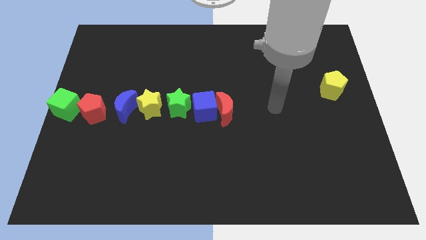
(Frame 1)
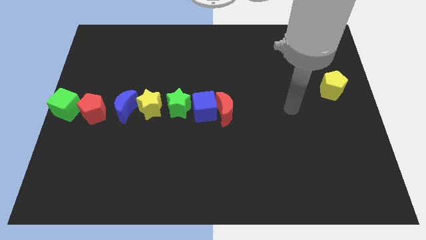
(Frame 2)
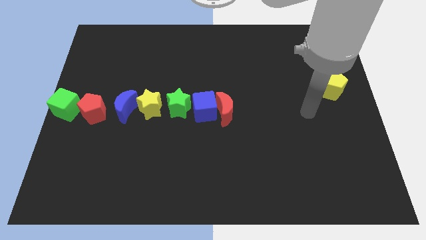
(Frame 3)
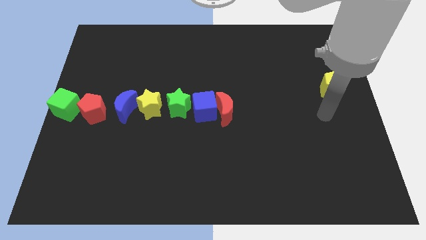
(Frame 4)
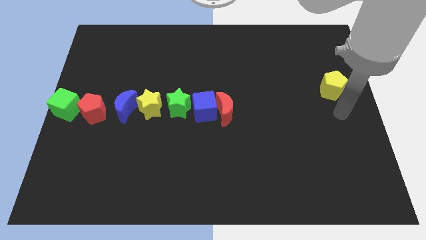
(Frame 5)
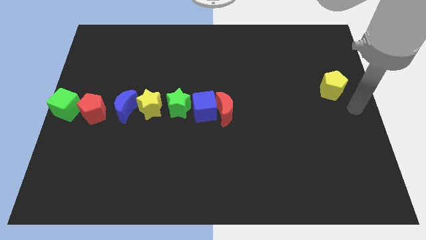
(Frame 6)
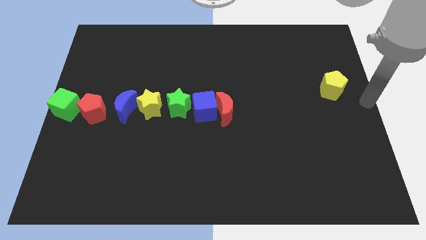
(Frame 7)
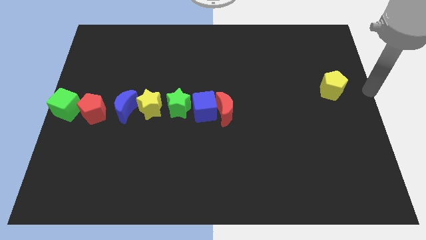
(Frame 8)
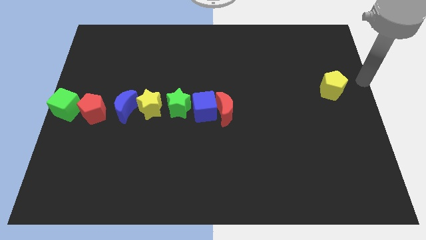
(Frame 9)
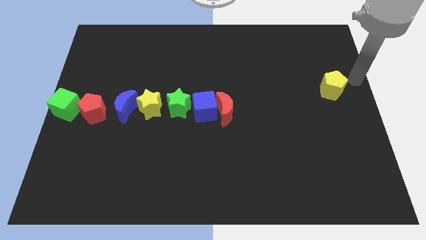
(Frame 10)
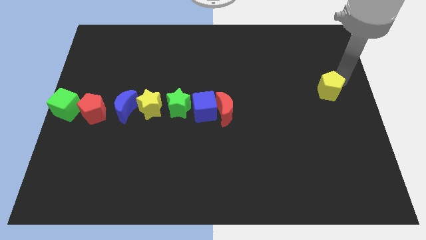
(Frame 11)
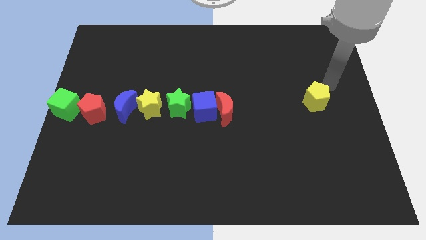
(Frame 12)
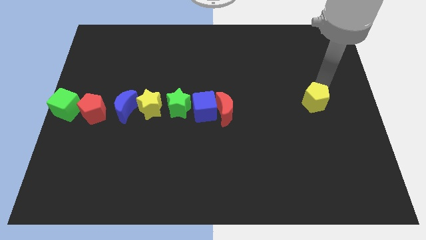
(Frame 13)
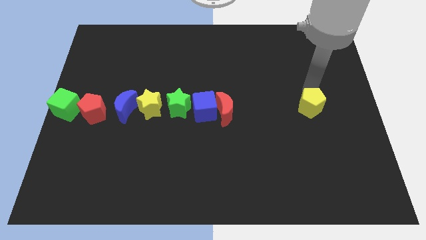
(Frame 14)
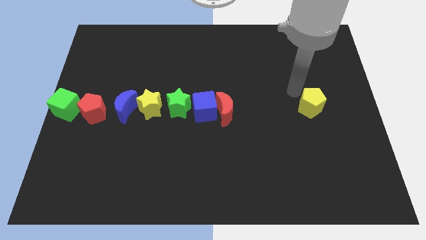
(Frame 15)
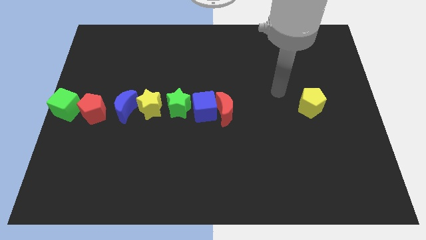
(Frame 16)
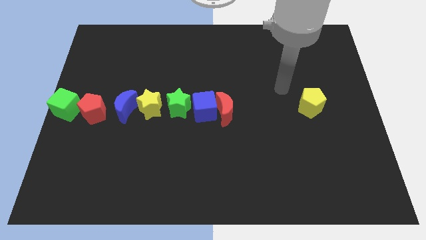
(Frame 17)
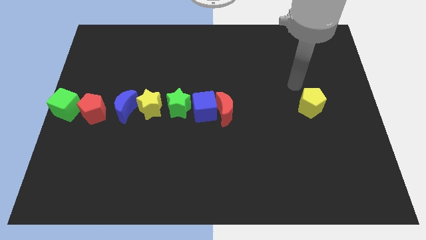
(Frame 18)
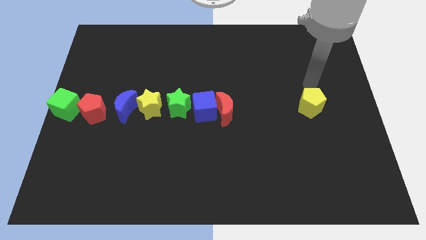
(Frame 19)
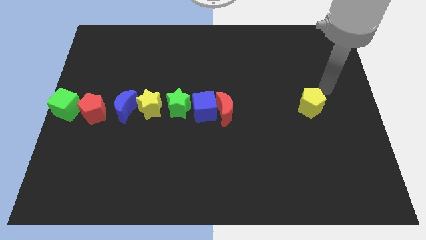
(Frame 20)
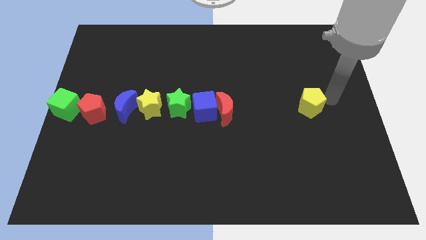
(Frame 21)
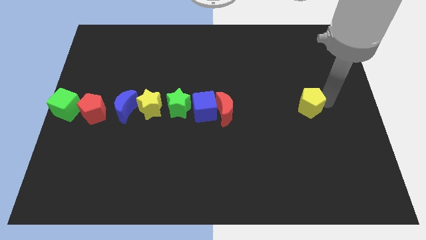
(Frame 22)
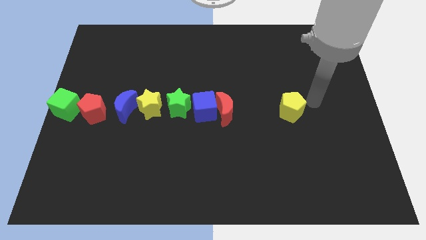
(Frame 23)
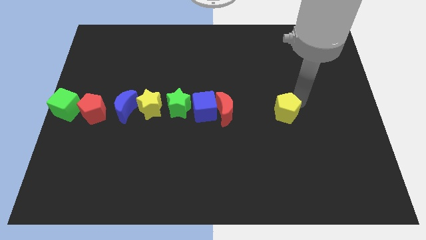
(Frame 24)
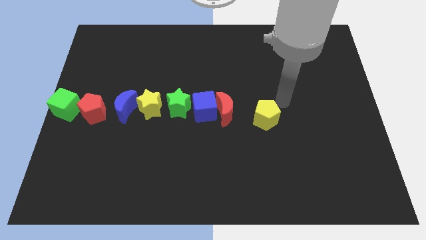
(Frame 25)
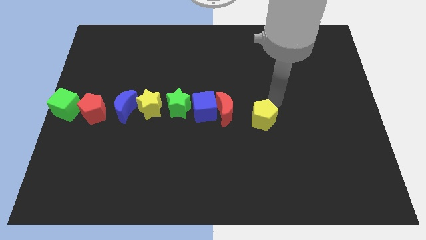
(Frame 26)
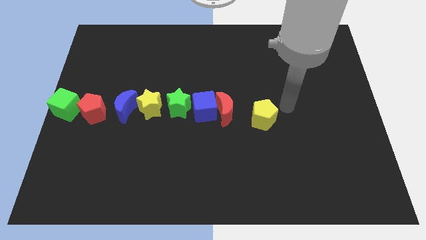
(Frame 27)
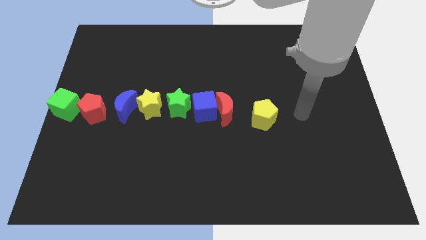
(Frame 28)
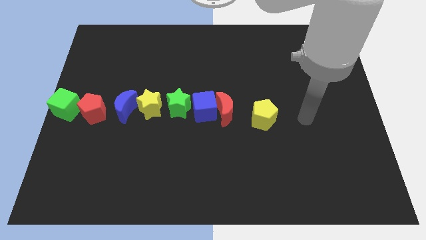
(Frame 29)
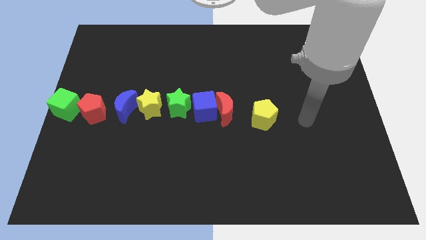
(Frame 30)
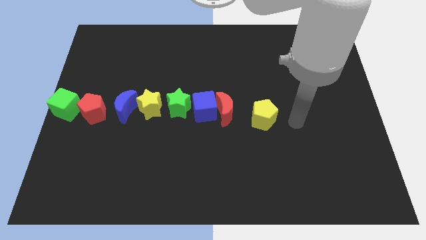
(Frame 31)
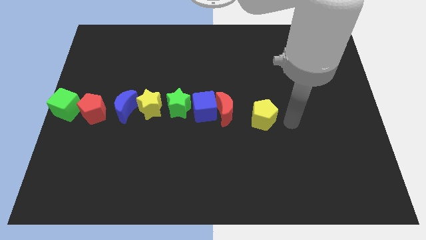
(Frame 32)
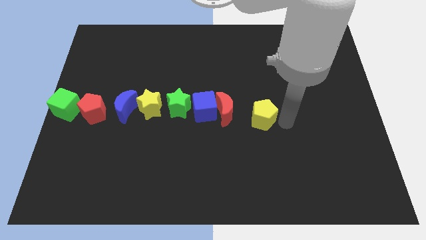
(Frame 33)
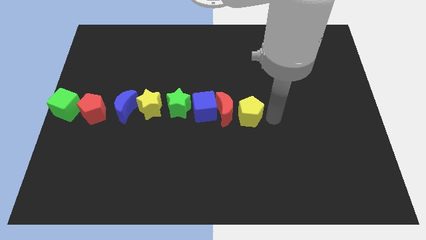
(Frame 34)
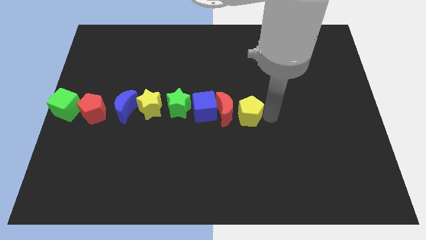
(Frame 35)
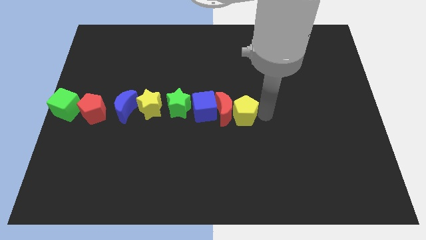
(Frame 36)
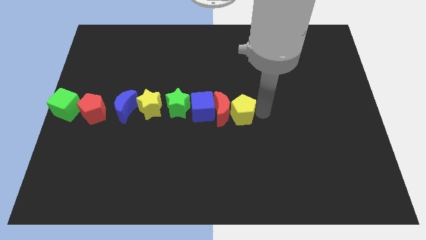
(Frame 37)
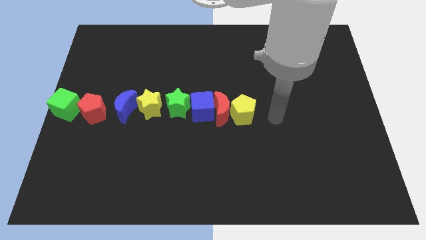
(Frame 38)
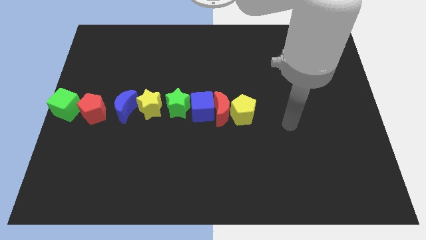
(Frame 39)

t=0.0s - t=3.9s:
push the yellow pentagon into the red moon

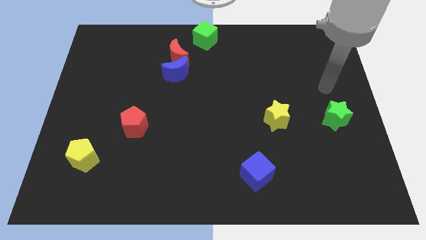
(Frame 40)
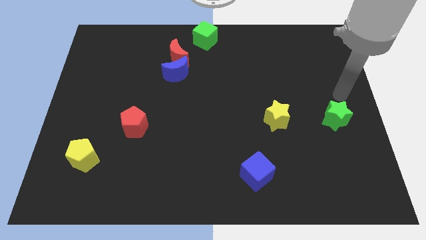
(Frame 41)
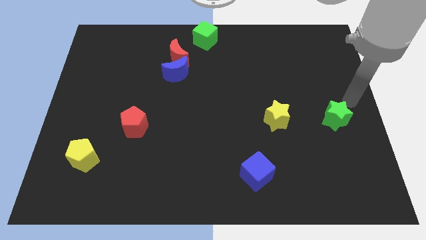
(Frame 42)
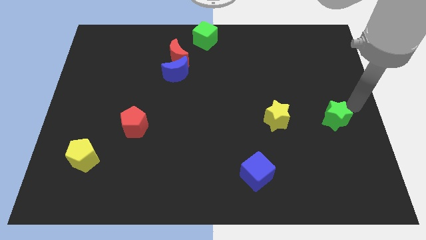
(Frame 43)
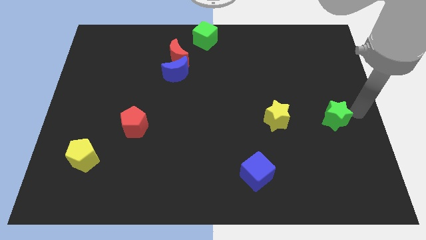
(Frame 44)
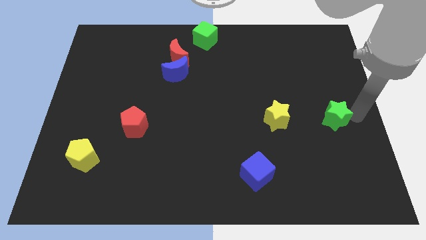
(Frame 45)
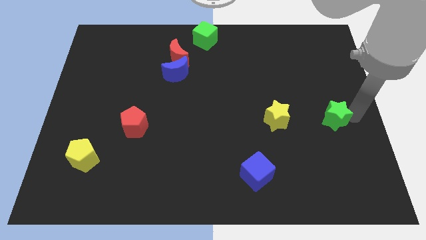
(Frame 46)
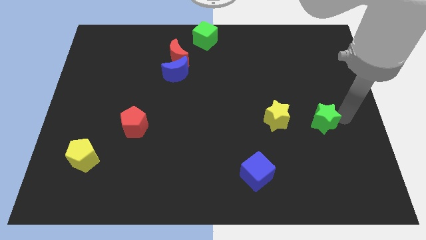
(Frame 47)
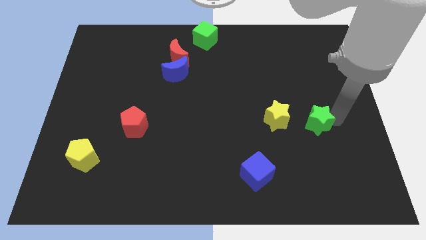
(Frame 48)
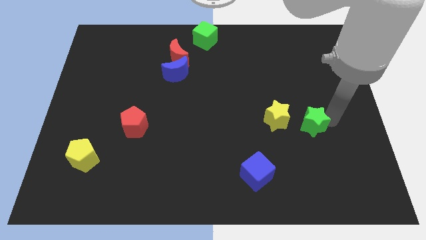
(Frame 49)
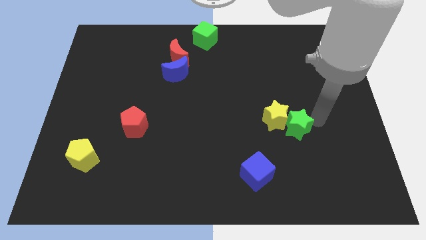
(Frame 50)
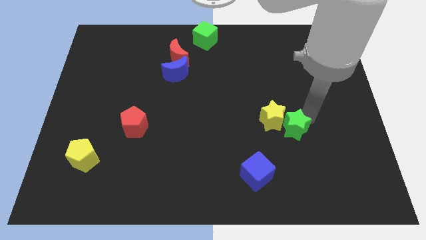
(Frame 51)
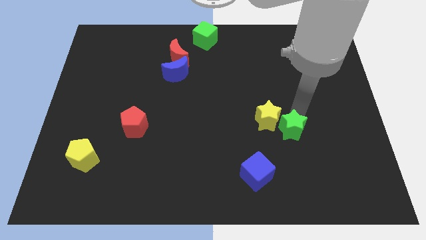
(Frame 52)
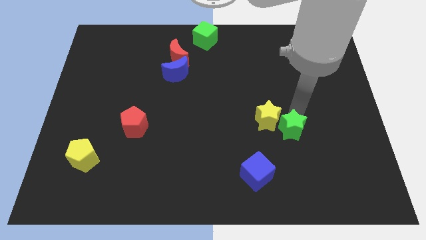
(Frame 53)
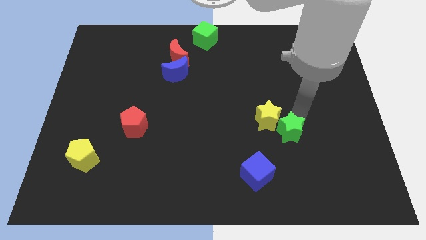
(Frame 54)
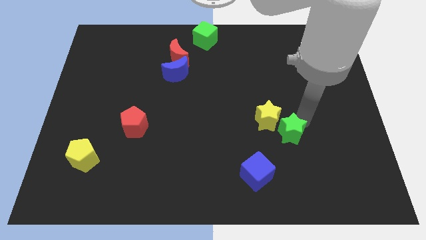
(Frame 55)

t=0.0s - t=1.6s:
push the green star into the right side of the yellow star

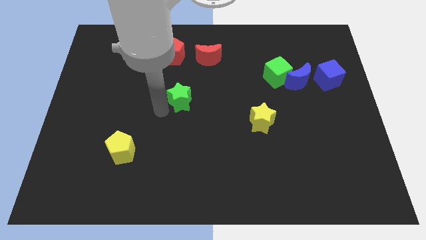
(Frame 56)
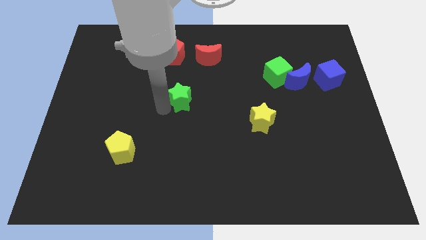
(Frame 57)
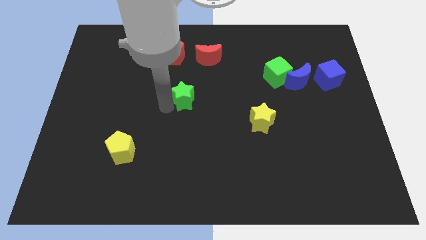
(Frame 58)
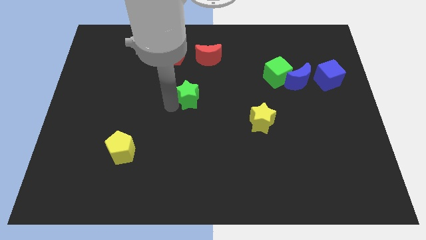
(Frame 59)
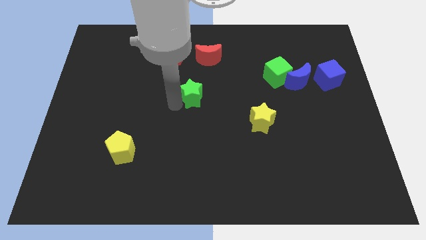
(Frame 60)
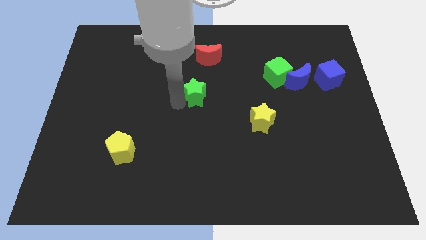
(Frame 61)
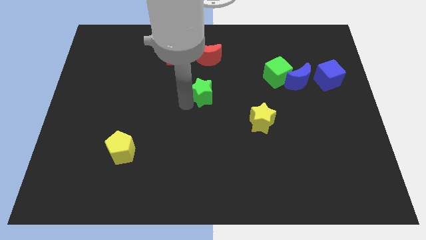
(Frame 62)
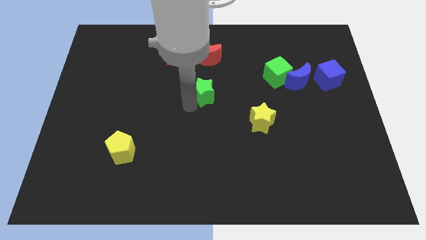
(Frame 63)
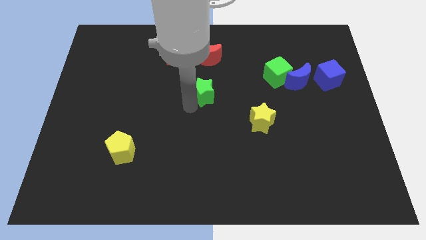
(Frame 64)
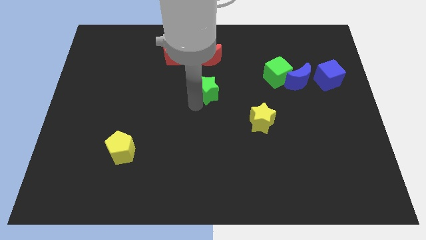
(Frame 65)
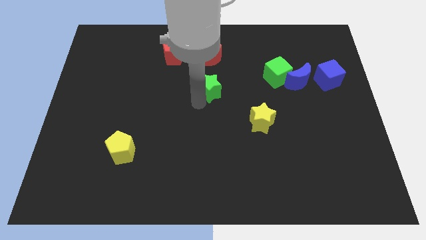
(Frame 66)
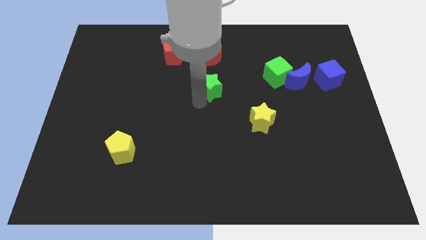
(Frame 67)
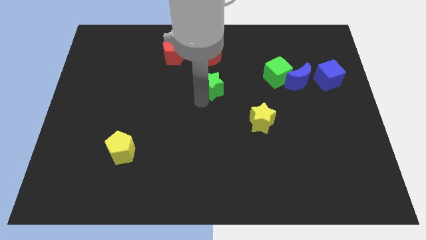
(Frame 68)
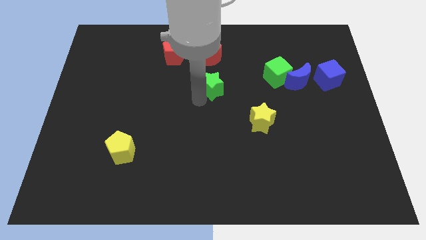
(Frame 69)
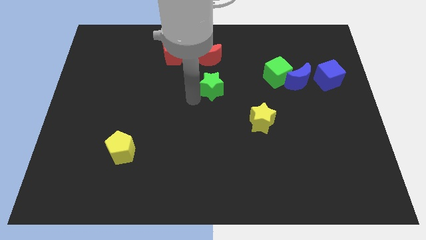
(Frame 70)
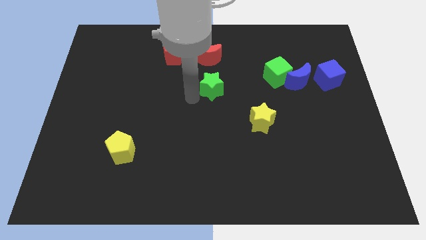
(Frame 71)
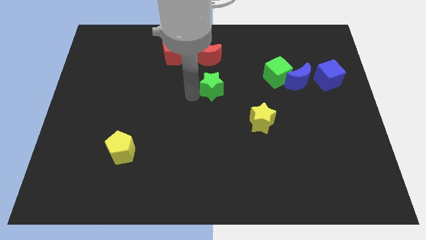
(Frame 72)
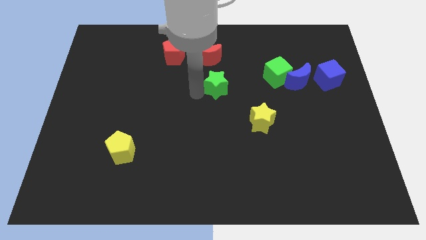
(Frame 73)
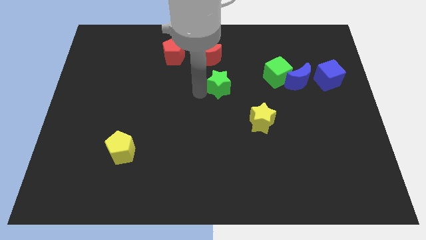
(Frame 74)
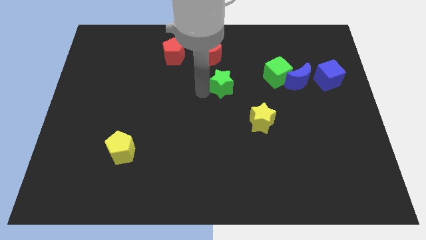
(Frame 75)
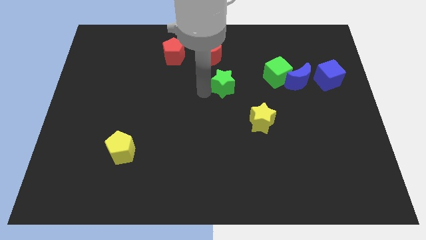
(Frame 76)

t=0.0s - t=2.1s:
push the green star towards the green cube

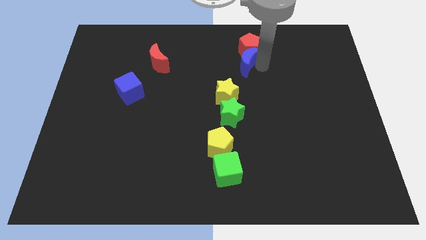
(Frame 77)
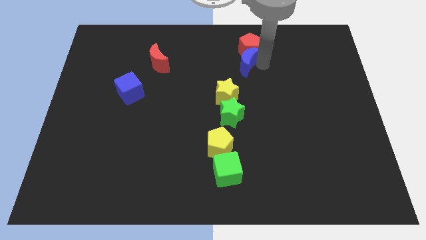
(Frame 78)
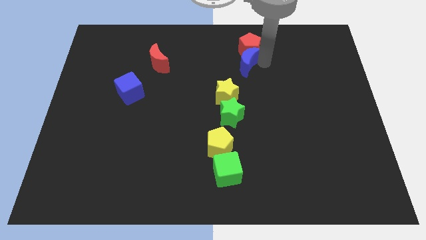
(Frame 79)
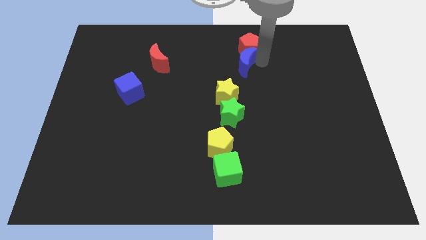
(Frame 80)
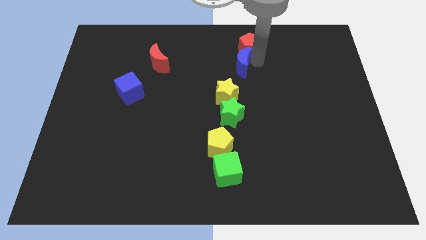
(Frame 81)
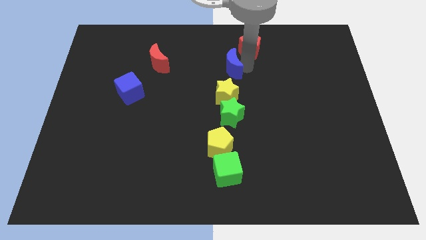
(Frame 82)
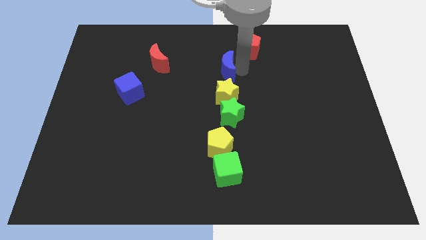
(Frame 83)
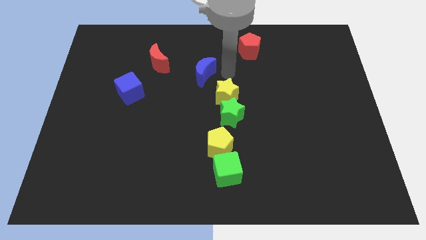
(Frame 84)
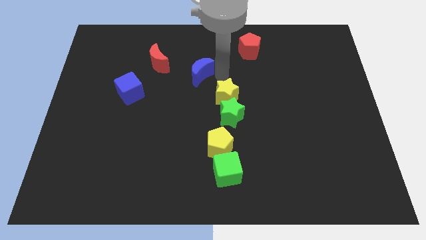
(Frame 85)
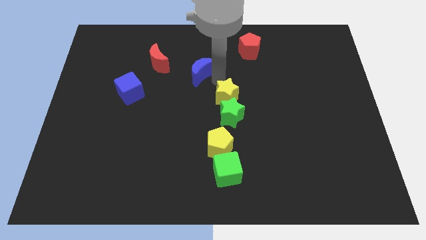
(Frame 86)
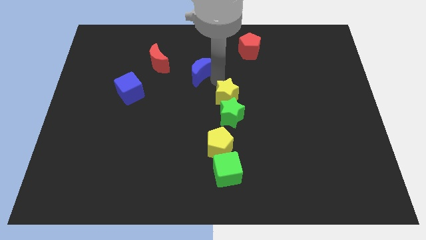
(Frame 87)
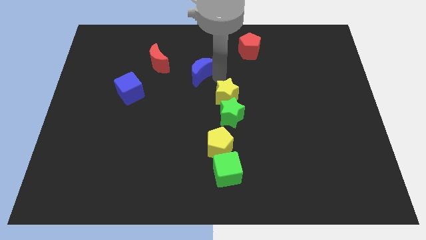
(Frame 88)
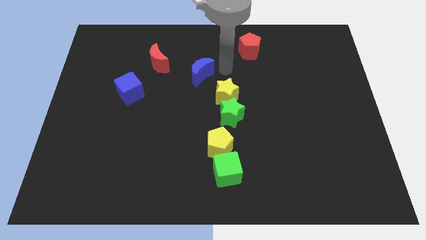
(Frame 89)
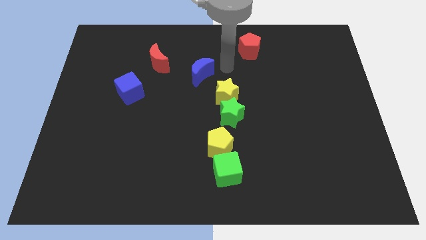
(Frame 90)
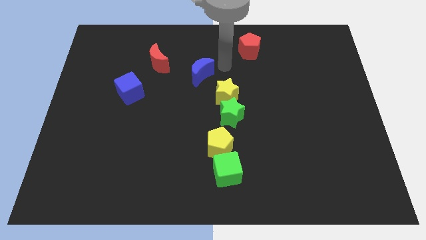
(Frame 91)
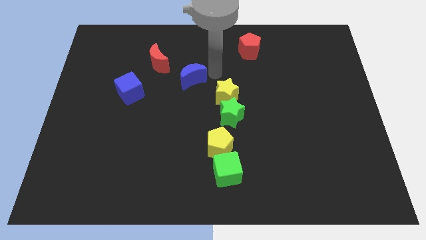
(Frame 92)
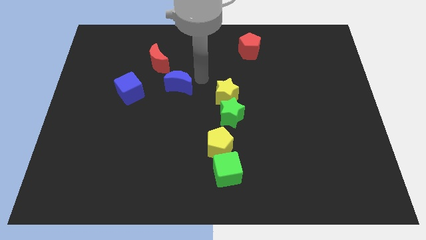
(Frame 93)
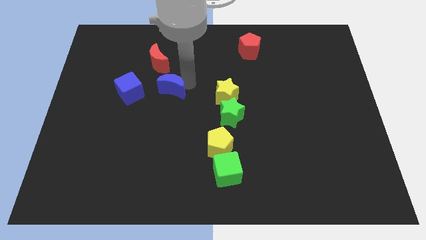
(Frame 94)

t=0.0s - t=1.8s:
move the blue moon parallel left to the yellow star
